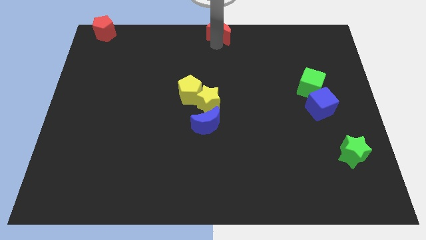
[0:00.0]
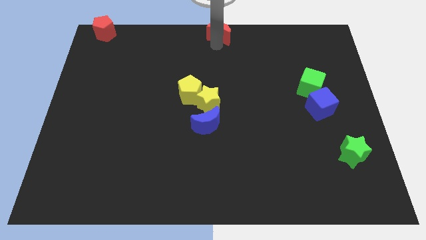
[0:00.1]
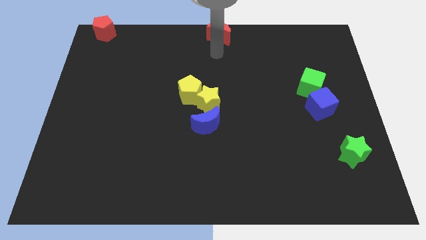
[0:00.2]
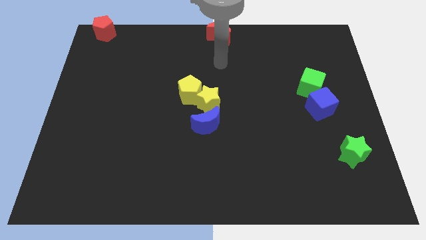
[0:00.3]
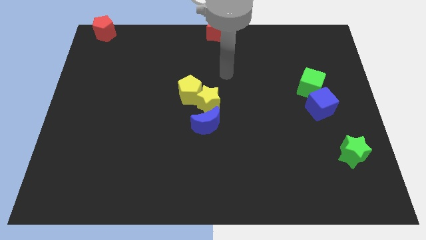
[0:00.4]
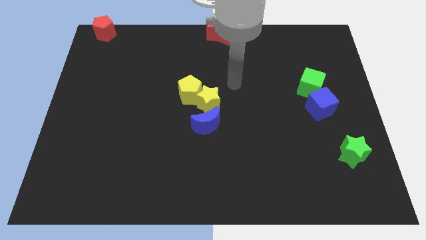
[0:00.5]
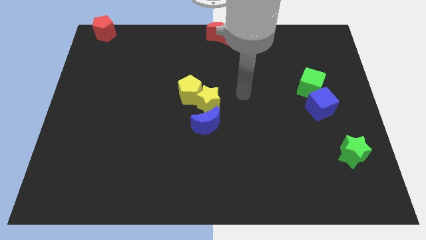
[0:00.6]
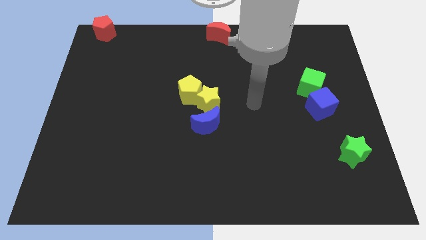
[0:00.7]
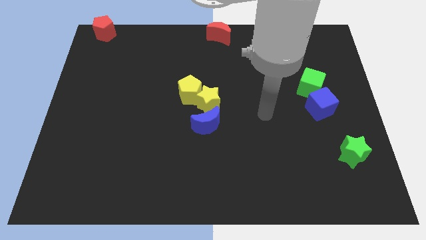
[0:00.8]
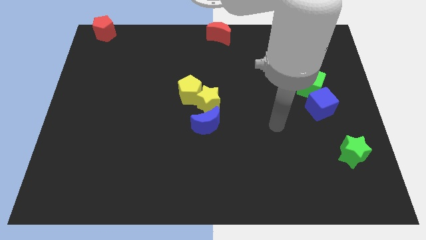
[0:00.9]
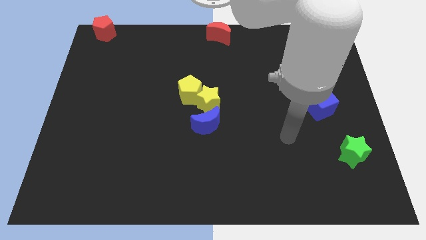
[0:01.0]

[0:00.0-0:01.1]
move your arm away from red moon

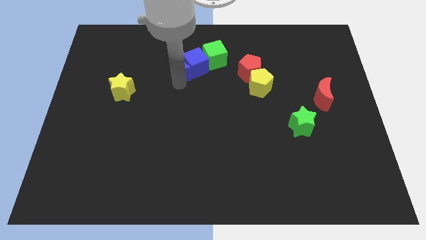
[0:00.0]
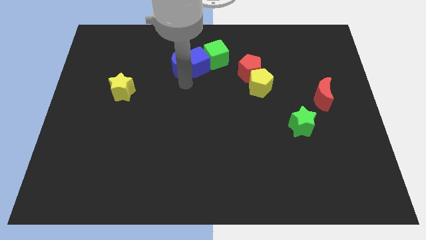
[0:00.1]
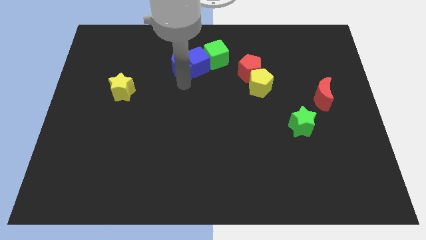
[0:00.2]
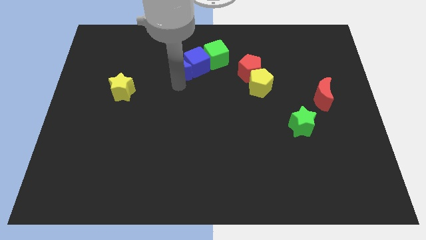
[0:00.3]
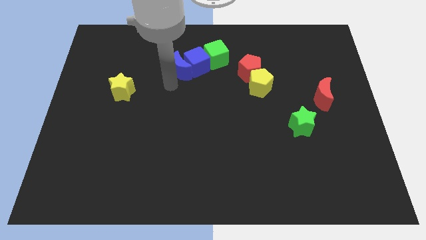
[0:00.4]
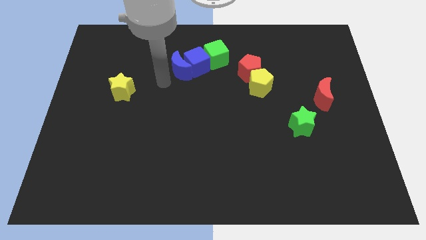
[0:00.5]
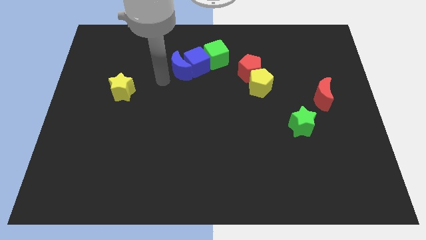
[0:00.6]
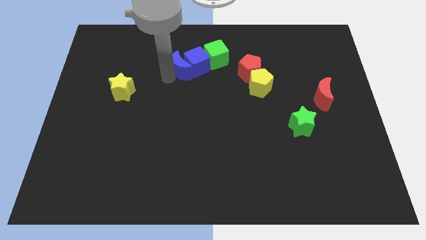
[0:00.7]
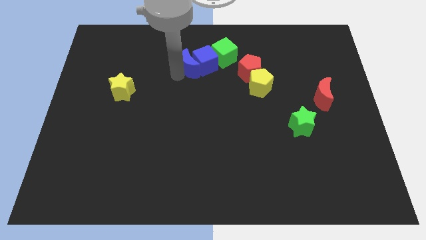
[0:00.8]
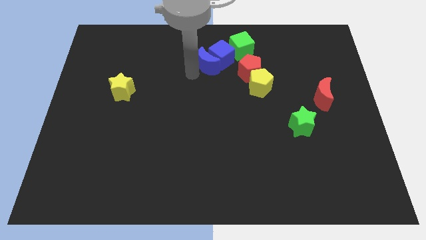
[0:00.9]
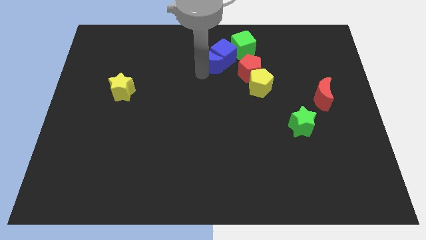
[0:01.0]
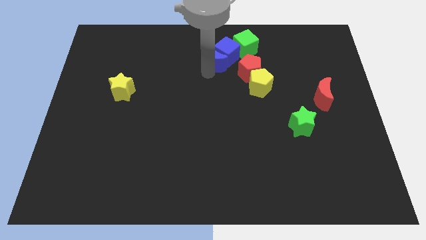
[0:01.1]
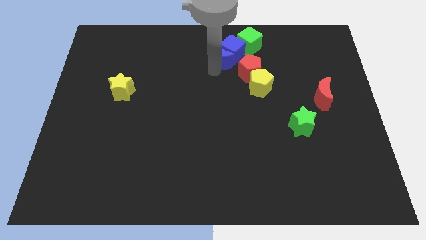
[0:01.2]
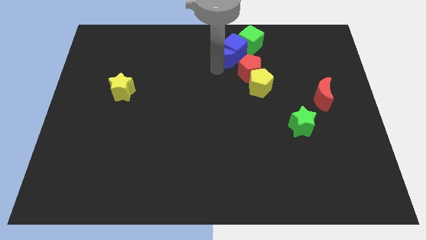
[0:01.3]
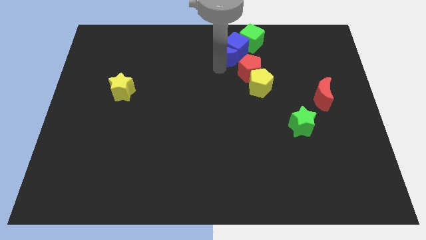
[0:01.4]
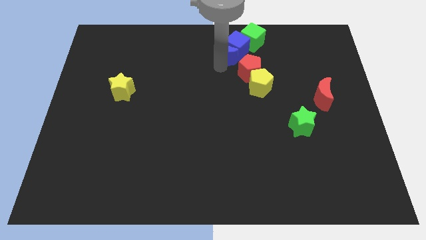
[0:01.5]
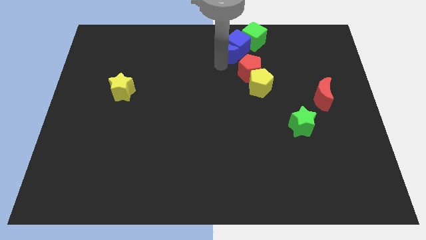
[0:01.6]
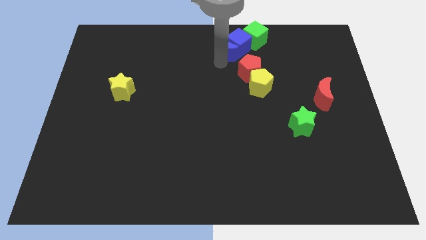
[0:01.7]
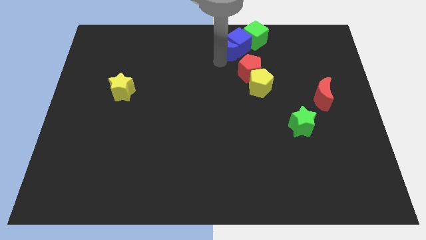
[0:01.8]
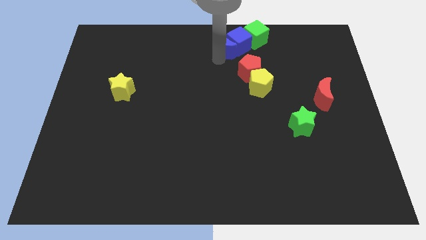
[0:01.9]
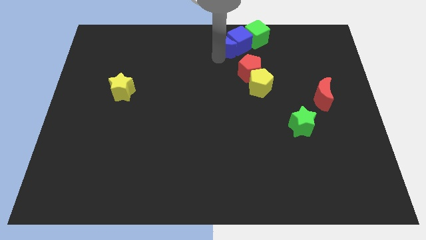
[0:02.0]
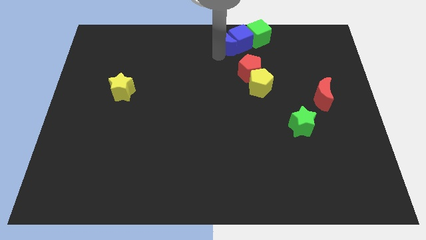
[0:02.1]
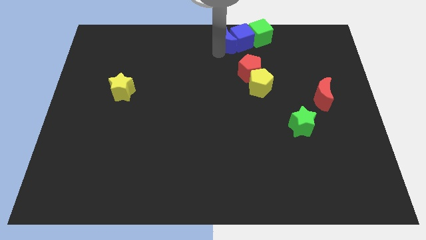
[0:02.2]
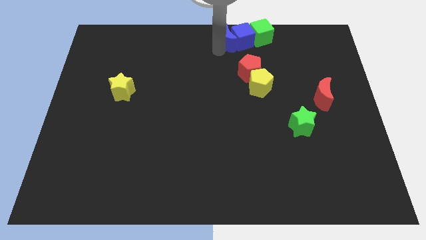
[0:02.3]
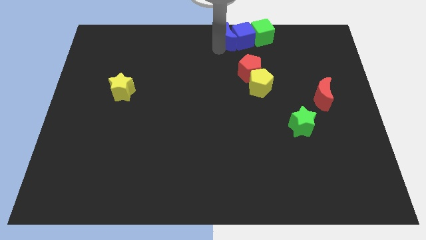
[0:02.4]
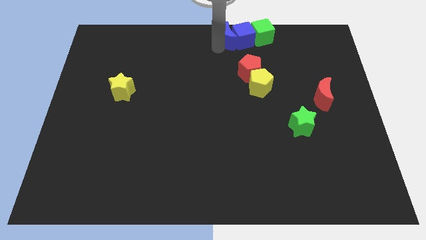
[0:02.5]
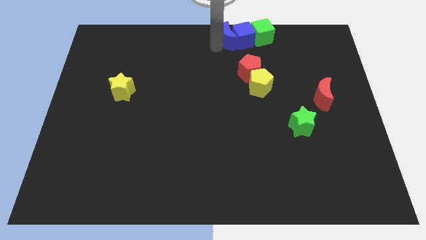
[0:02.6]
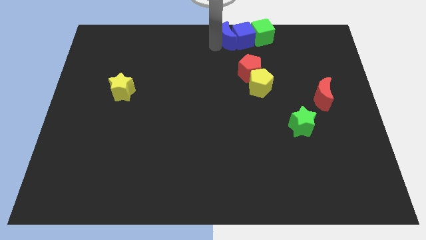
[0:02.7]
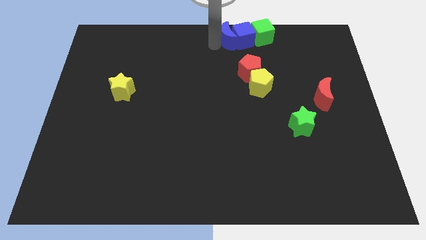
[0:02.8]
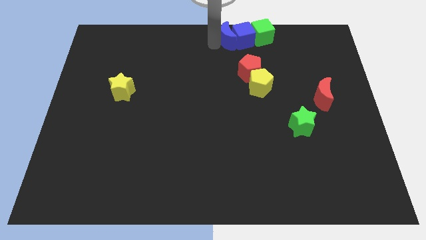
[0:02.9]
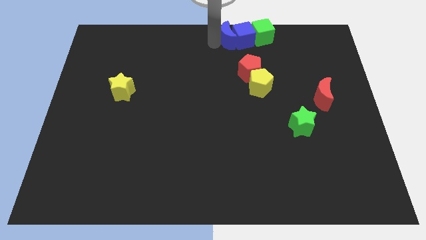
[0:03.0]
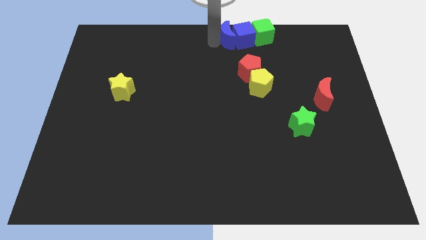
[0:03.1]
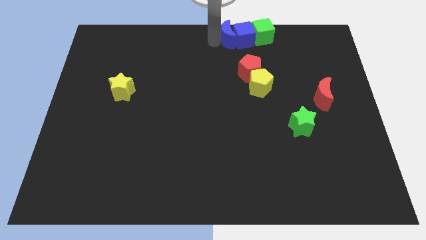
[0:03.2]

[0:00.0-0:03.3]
slide the blue blocks and the green cube towards the top right

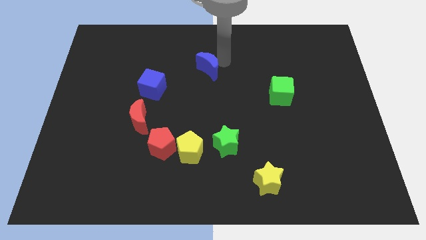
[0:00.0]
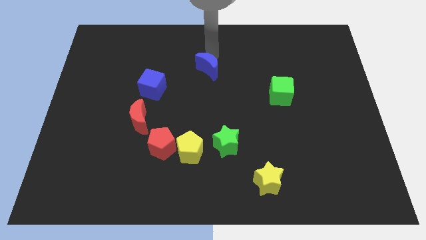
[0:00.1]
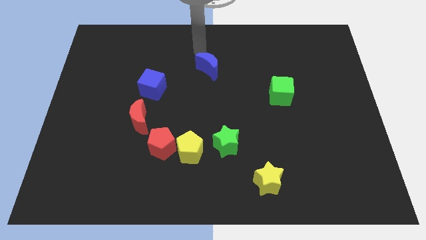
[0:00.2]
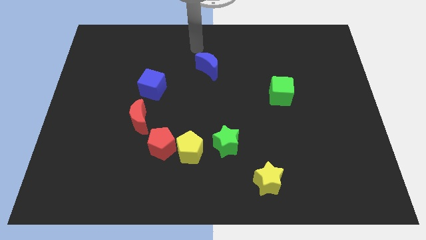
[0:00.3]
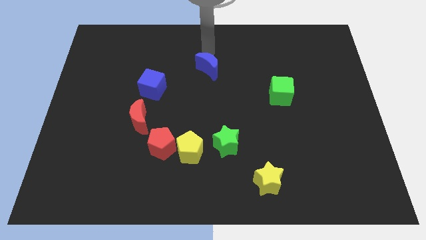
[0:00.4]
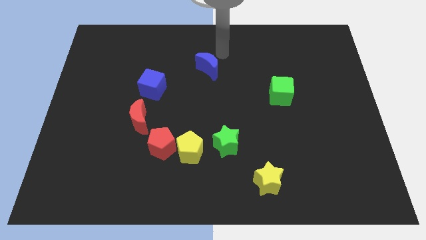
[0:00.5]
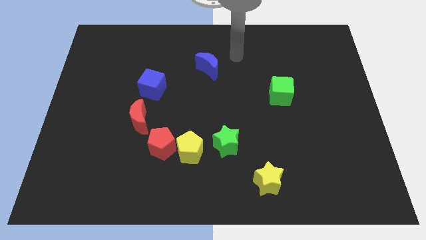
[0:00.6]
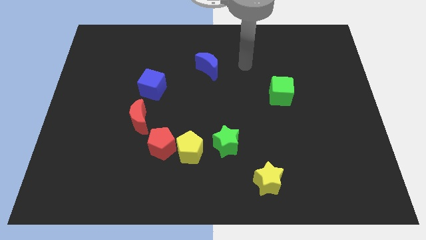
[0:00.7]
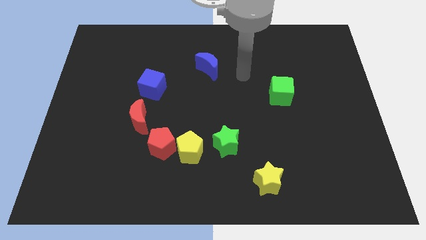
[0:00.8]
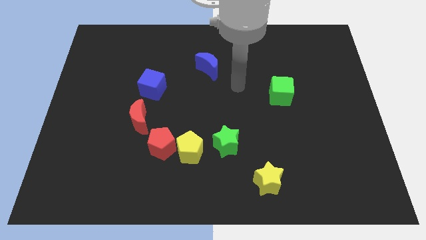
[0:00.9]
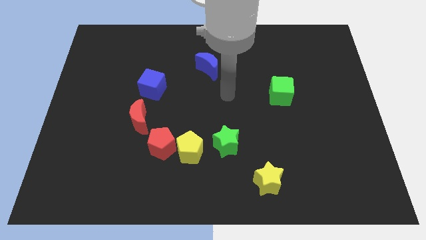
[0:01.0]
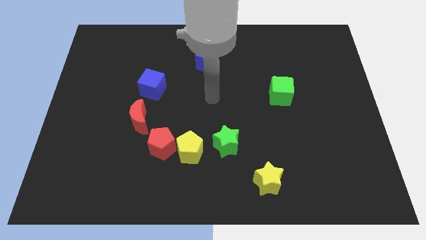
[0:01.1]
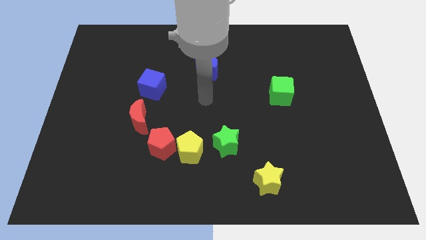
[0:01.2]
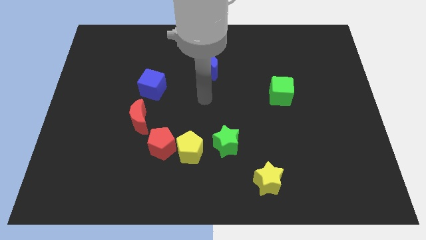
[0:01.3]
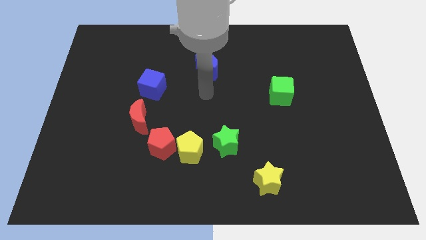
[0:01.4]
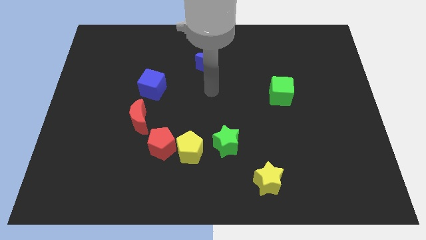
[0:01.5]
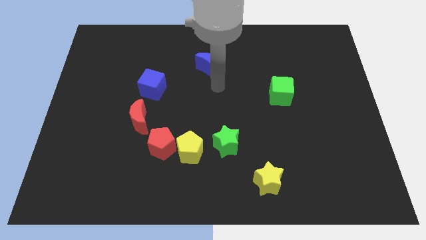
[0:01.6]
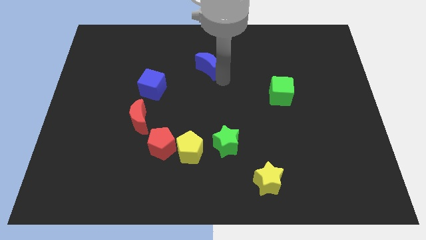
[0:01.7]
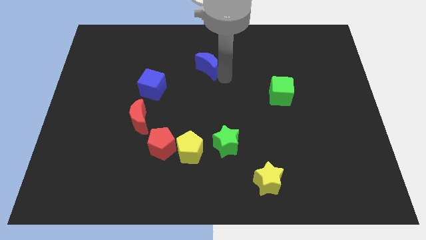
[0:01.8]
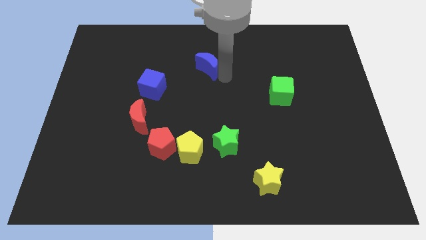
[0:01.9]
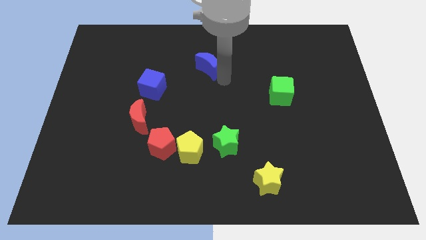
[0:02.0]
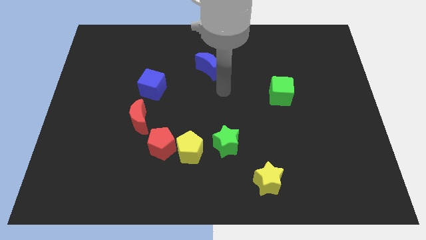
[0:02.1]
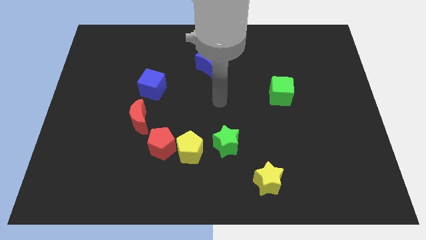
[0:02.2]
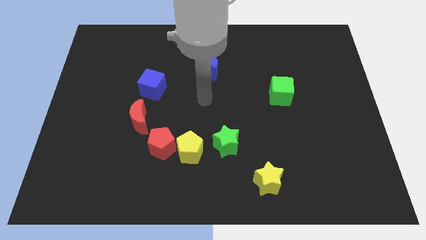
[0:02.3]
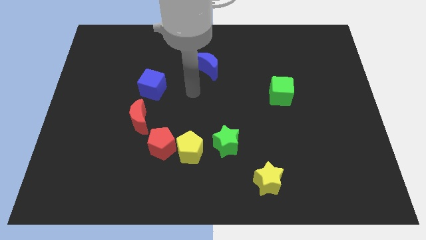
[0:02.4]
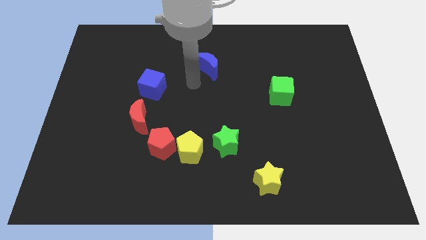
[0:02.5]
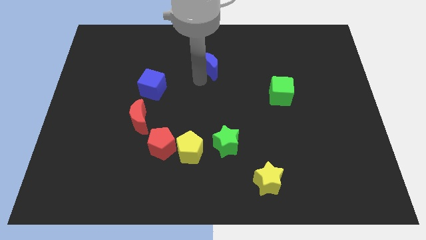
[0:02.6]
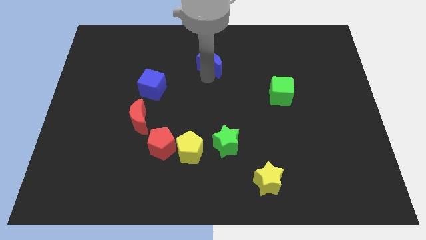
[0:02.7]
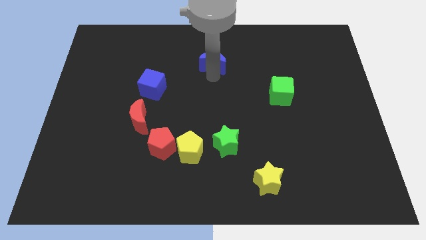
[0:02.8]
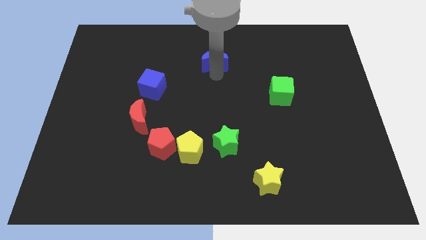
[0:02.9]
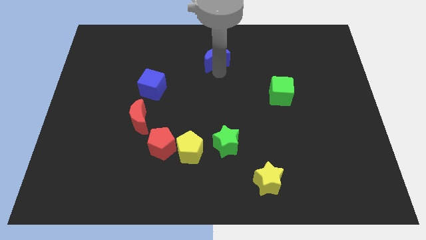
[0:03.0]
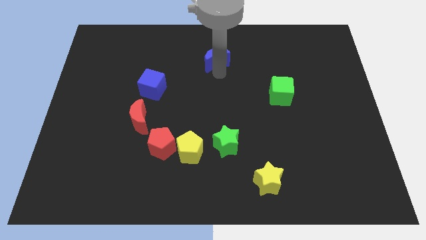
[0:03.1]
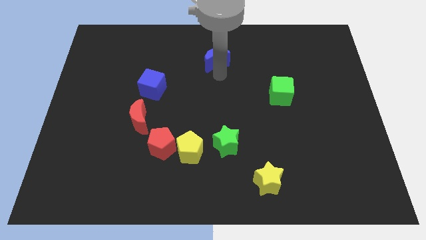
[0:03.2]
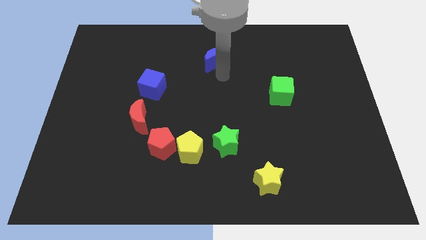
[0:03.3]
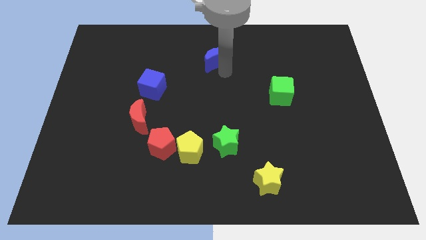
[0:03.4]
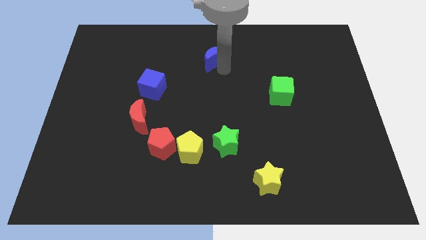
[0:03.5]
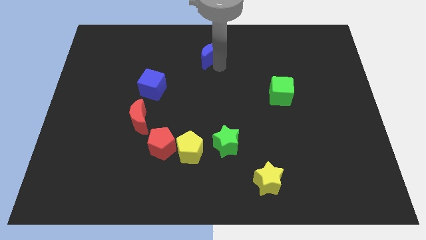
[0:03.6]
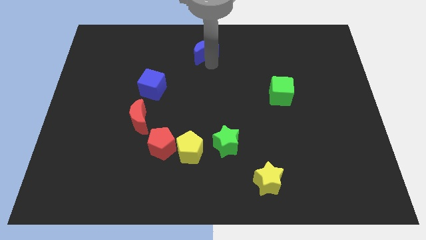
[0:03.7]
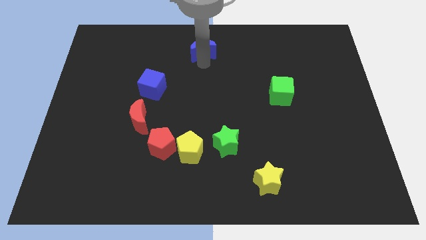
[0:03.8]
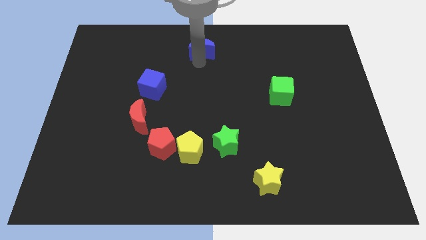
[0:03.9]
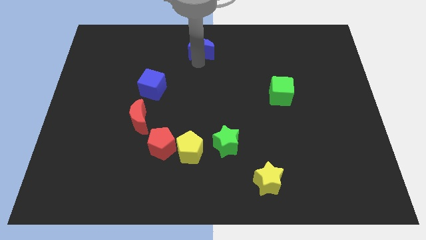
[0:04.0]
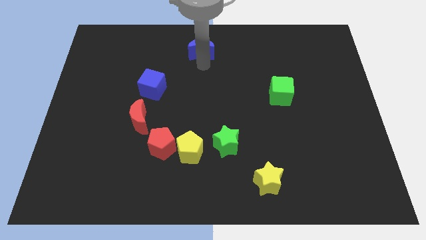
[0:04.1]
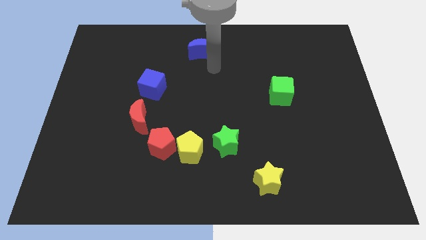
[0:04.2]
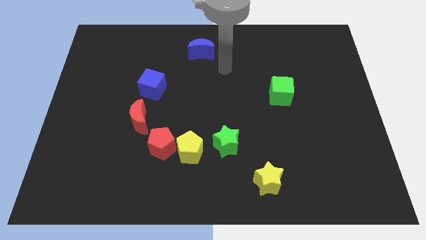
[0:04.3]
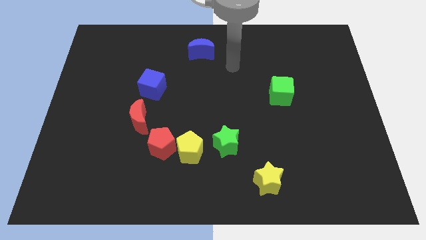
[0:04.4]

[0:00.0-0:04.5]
slightly move the blue moon upwards
